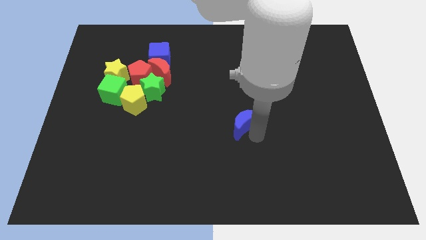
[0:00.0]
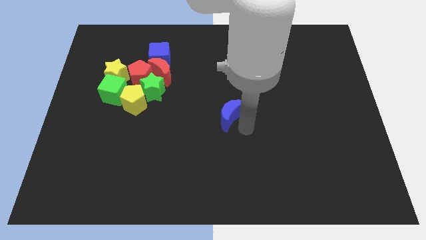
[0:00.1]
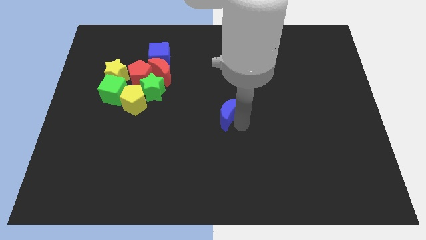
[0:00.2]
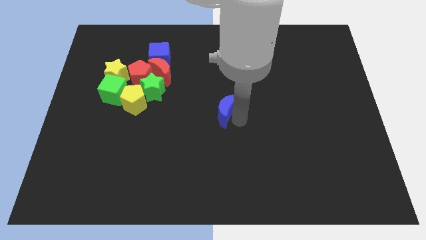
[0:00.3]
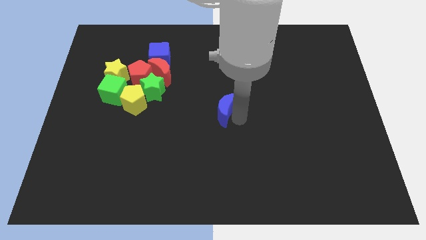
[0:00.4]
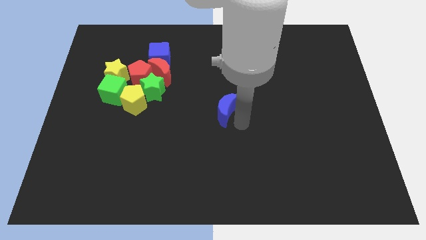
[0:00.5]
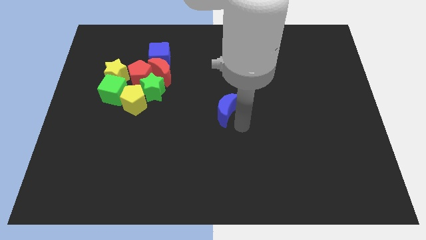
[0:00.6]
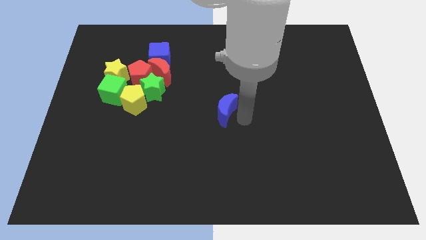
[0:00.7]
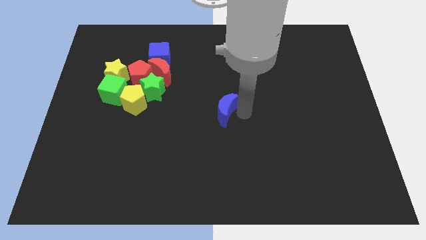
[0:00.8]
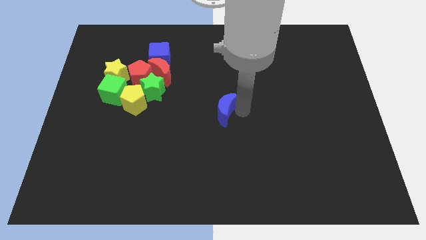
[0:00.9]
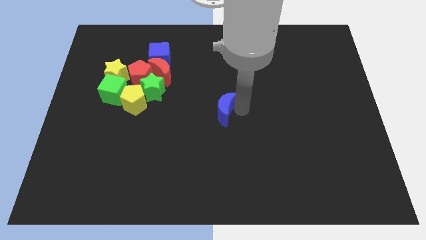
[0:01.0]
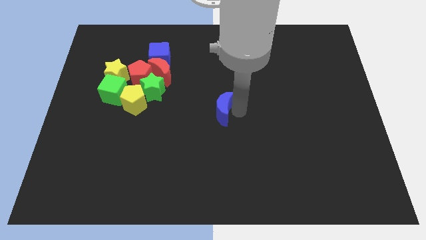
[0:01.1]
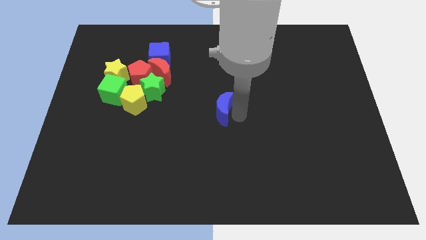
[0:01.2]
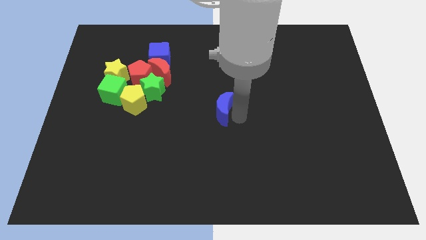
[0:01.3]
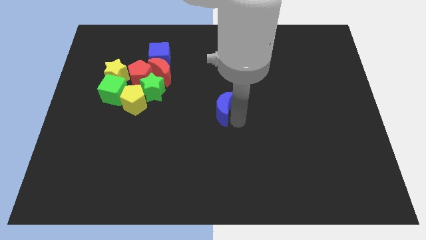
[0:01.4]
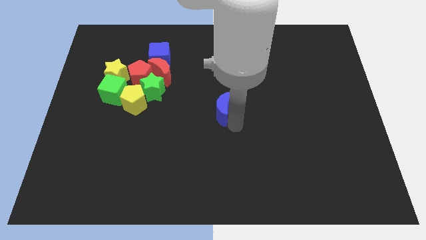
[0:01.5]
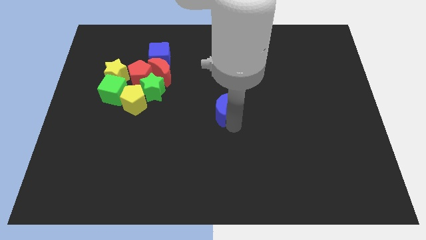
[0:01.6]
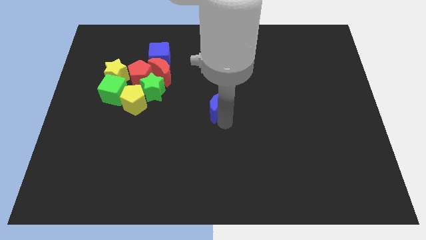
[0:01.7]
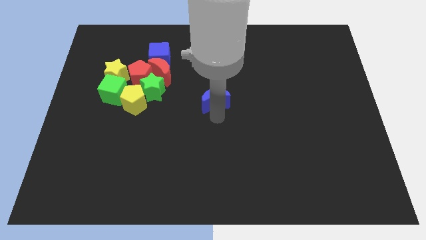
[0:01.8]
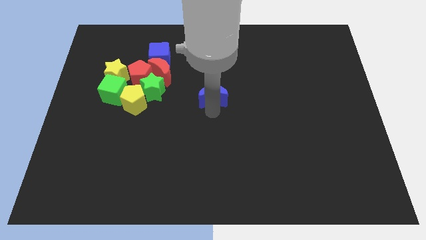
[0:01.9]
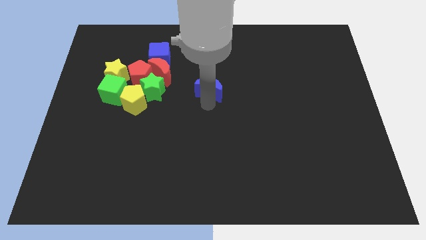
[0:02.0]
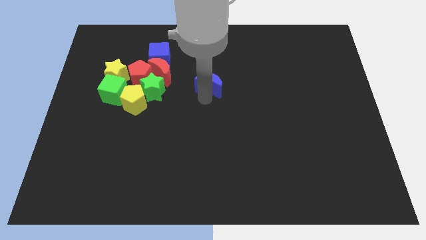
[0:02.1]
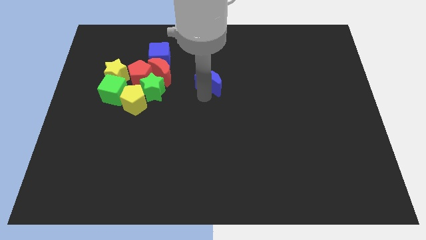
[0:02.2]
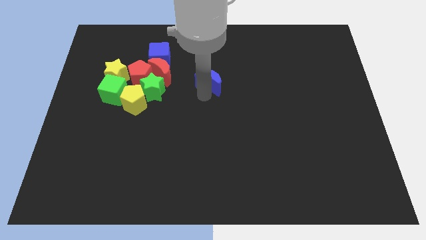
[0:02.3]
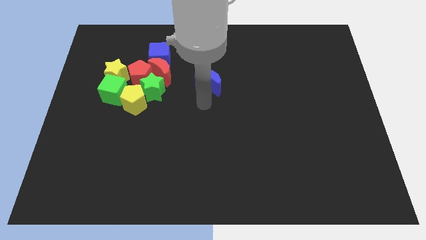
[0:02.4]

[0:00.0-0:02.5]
push the blue crescent towards the top of the board

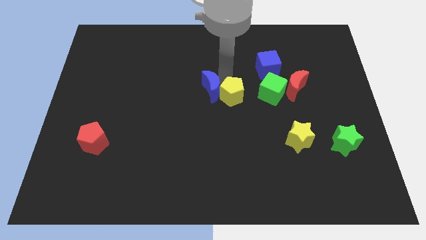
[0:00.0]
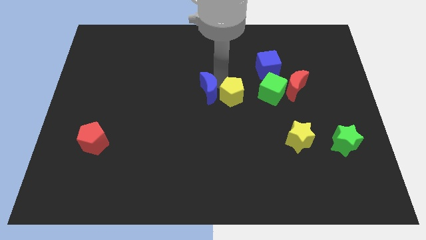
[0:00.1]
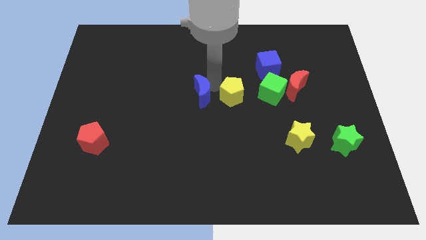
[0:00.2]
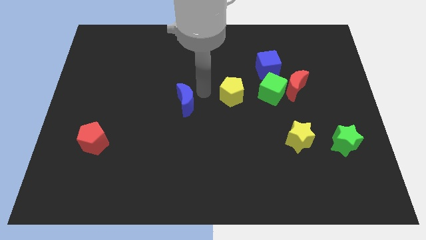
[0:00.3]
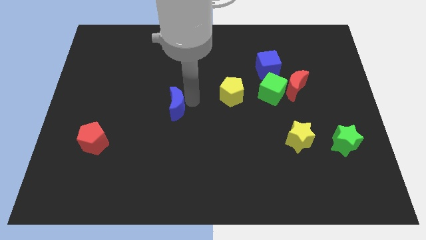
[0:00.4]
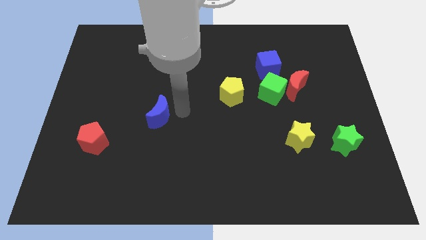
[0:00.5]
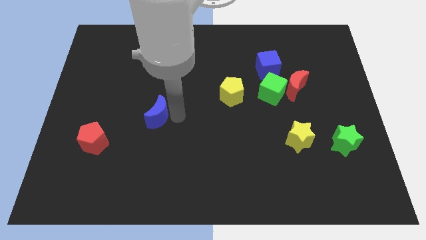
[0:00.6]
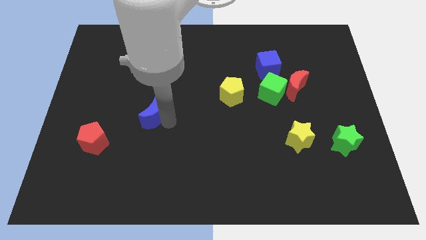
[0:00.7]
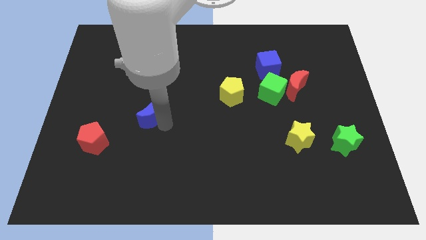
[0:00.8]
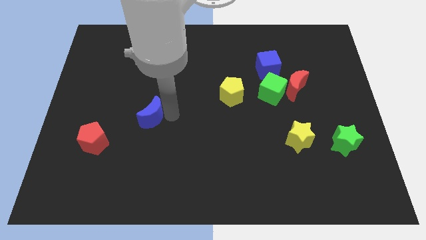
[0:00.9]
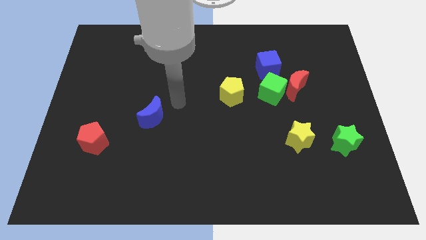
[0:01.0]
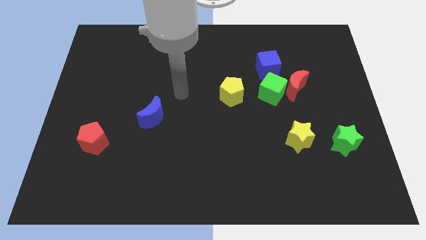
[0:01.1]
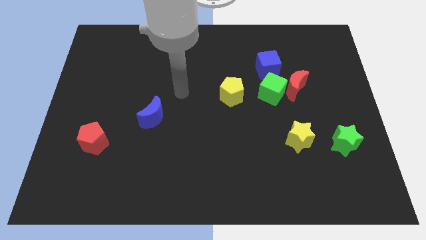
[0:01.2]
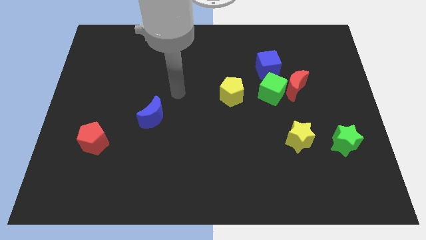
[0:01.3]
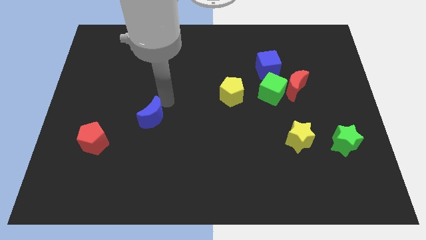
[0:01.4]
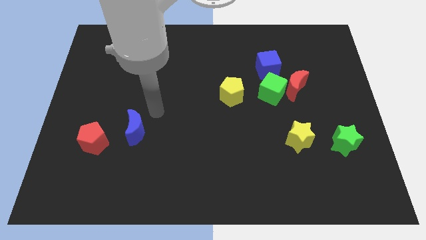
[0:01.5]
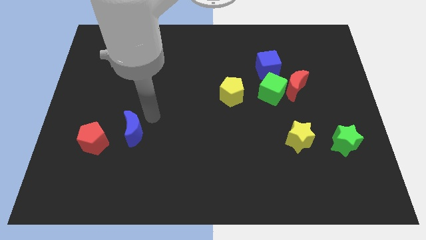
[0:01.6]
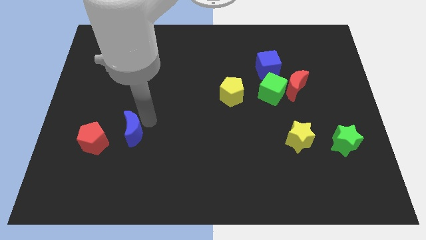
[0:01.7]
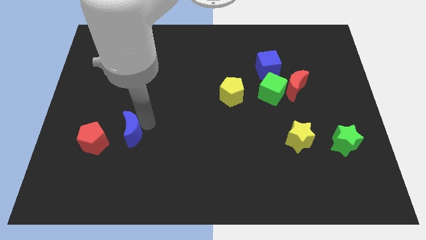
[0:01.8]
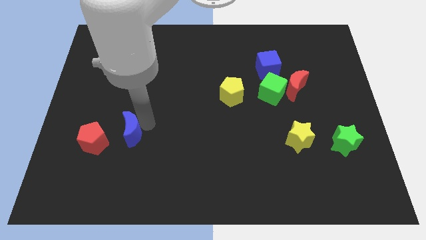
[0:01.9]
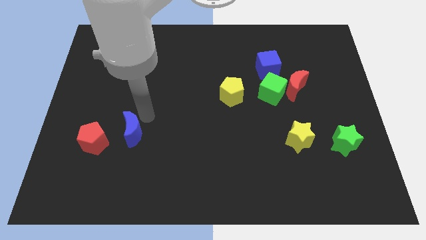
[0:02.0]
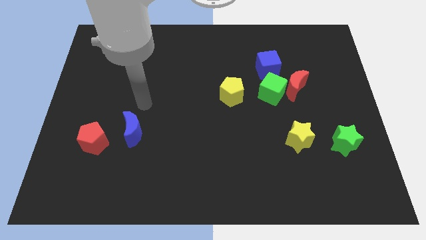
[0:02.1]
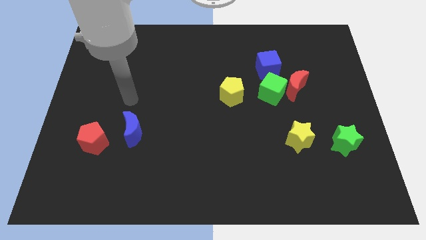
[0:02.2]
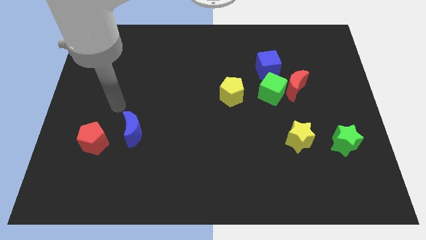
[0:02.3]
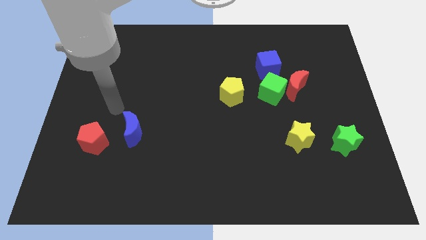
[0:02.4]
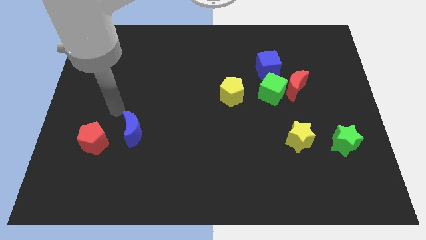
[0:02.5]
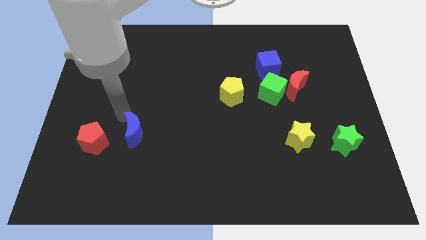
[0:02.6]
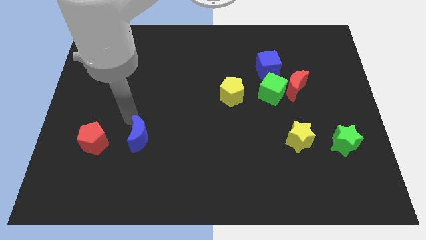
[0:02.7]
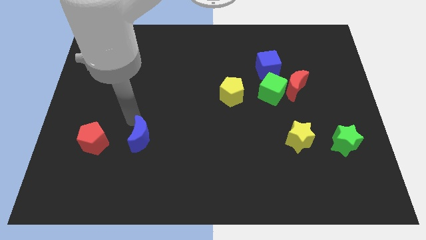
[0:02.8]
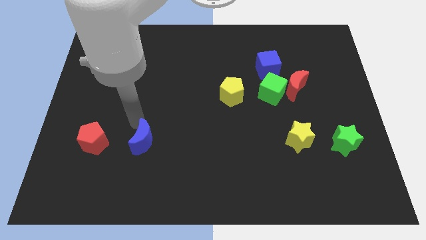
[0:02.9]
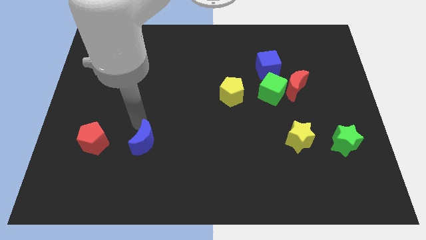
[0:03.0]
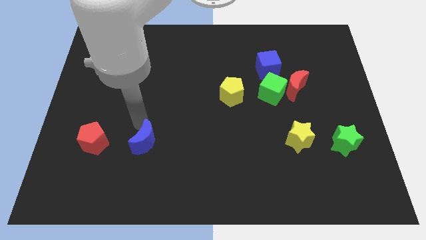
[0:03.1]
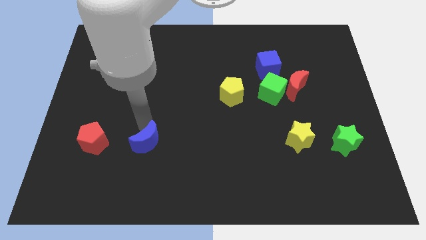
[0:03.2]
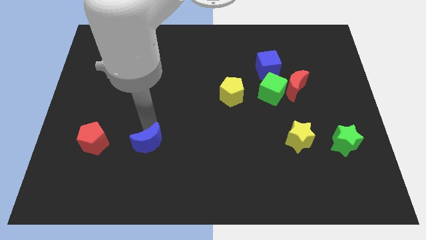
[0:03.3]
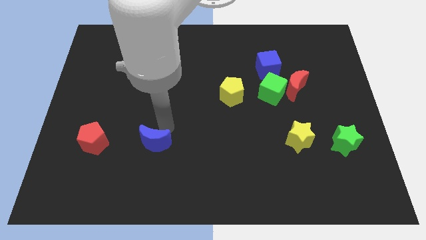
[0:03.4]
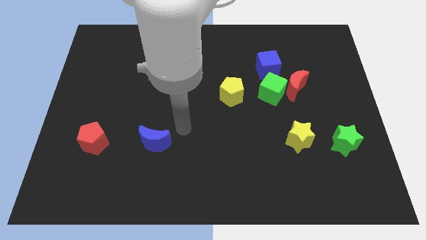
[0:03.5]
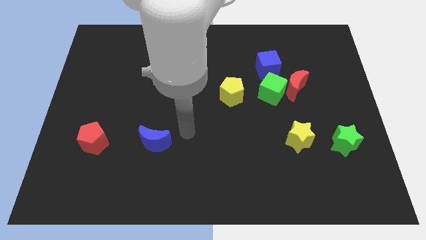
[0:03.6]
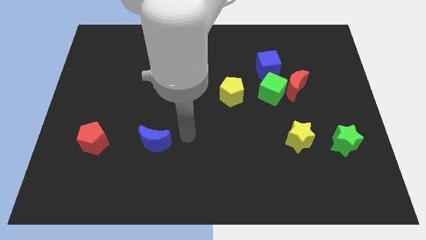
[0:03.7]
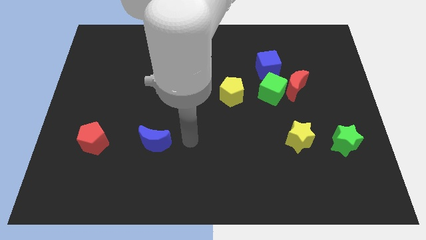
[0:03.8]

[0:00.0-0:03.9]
place the blue moon to the right of the red pentagon

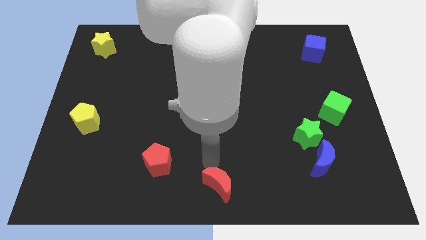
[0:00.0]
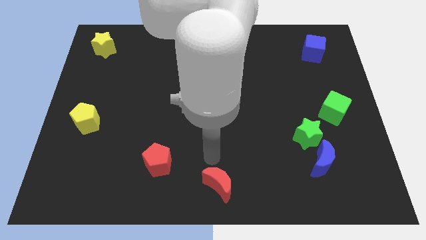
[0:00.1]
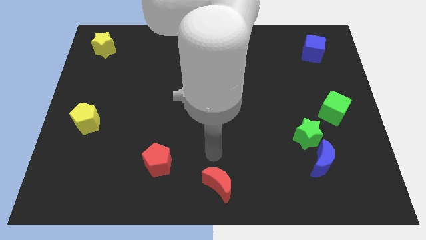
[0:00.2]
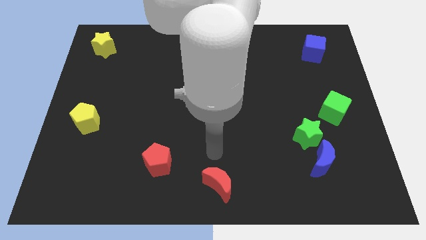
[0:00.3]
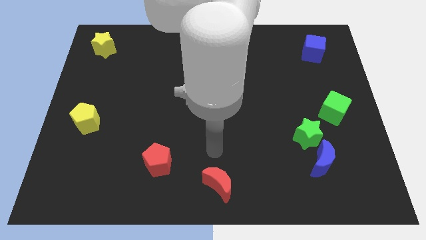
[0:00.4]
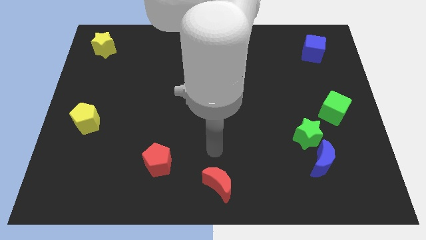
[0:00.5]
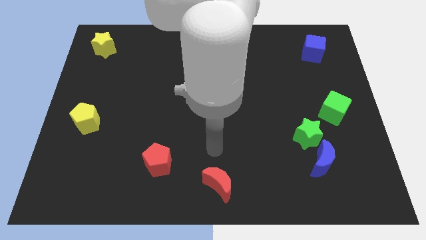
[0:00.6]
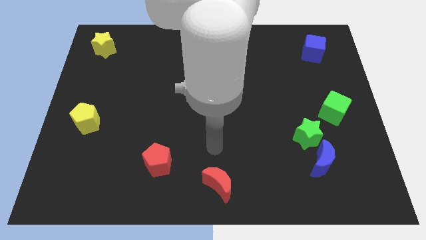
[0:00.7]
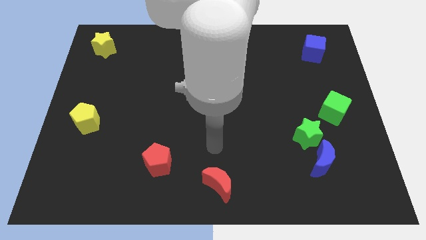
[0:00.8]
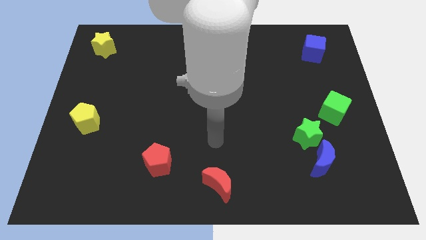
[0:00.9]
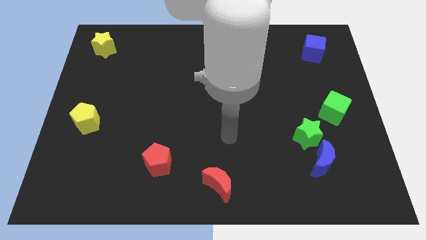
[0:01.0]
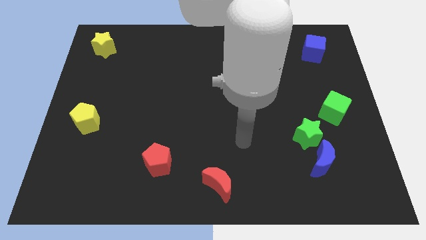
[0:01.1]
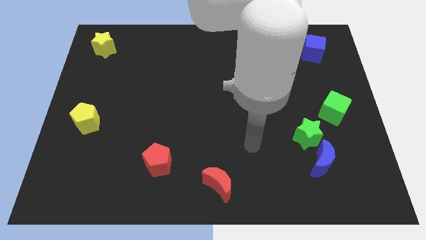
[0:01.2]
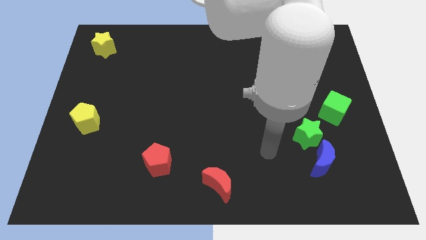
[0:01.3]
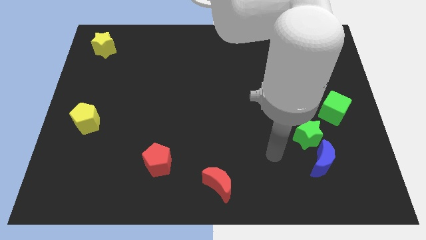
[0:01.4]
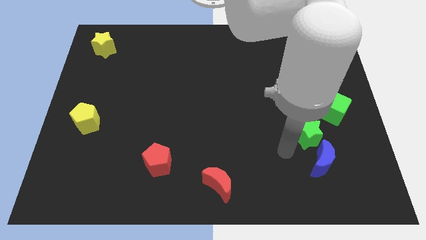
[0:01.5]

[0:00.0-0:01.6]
move your arm away from the red crescent

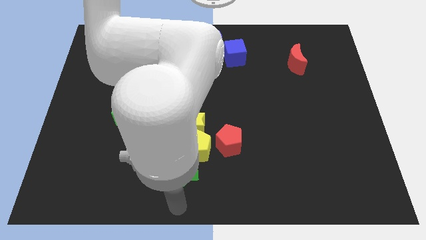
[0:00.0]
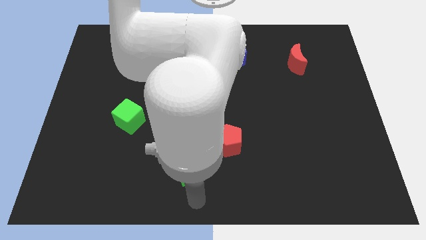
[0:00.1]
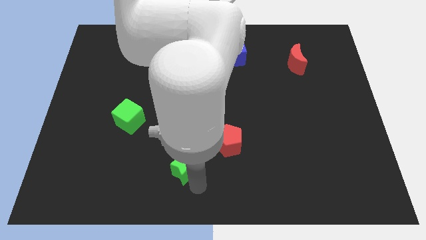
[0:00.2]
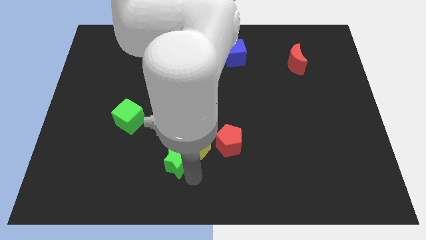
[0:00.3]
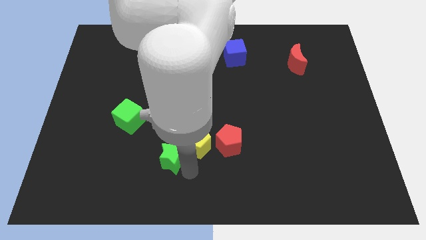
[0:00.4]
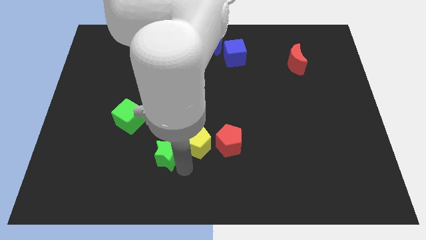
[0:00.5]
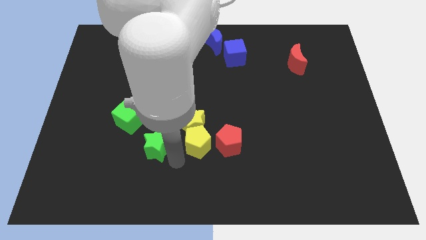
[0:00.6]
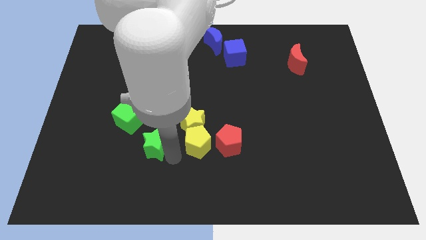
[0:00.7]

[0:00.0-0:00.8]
push the green star up slightly

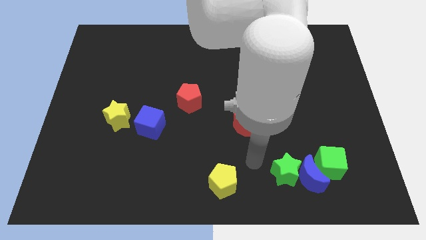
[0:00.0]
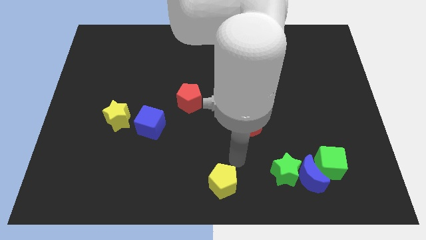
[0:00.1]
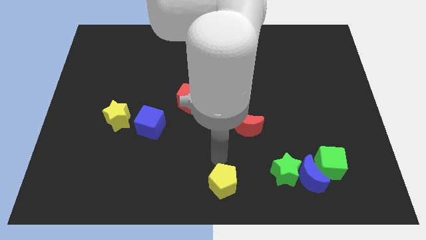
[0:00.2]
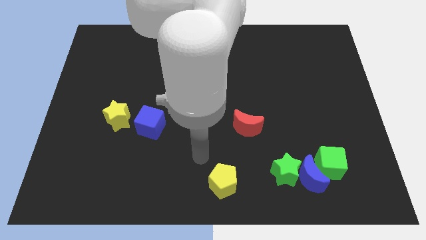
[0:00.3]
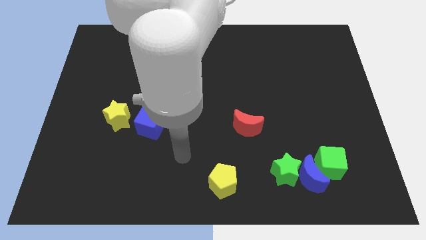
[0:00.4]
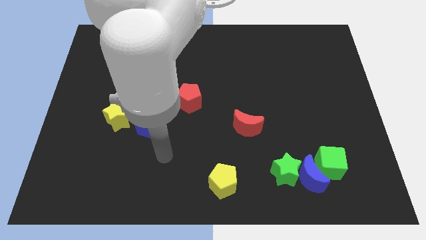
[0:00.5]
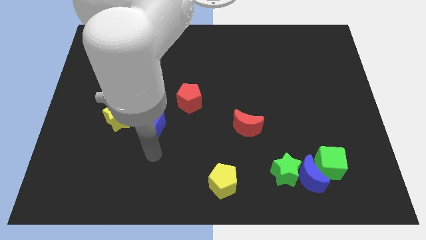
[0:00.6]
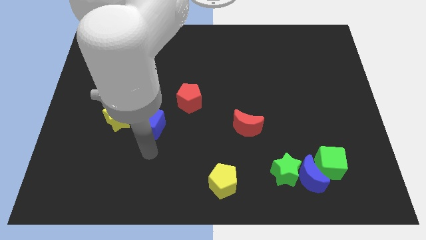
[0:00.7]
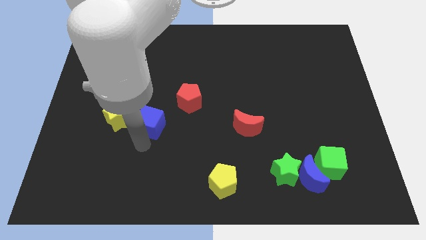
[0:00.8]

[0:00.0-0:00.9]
move your arm to the bottom of blue cube
